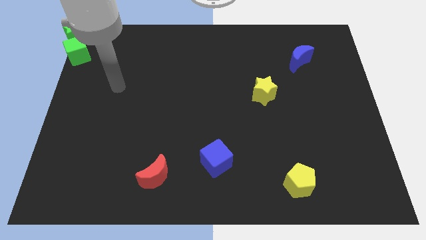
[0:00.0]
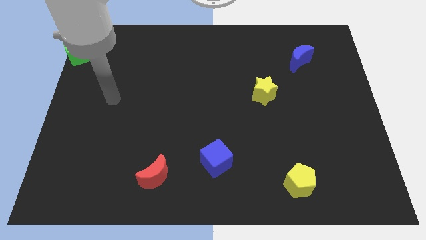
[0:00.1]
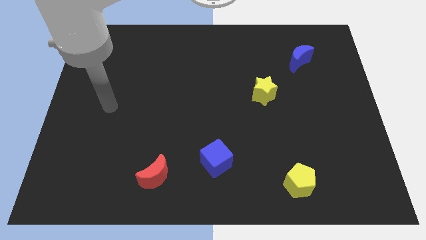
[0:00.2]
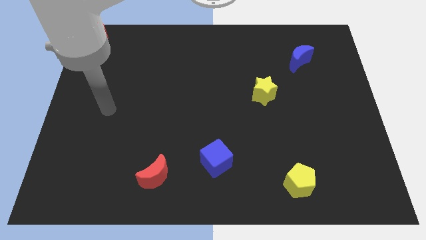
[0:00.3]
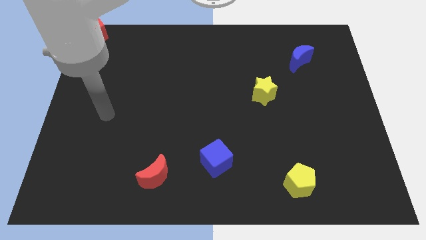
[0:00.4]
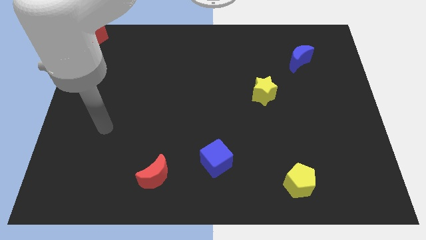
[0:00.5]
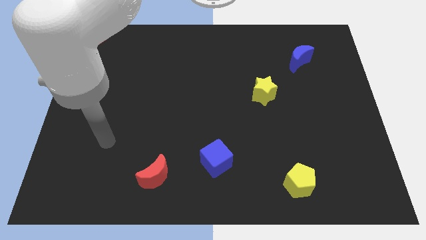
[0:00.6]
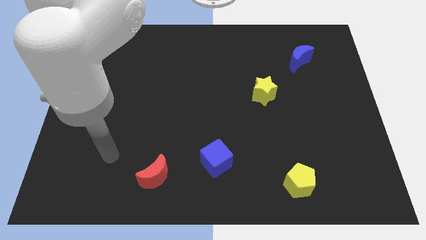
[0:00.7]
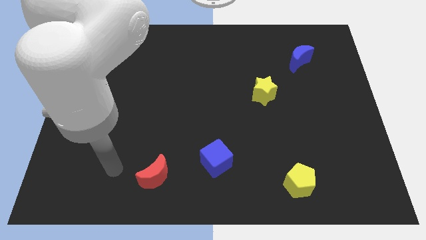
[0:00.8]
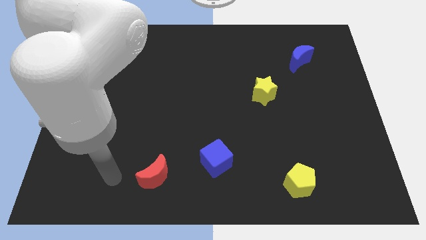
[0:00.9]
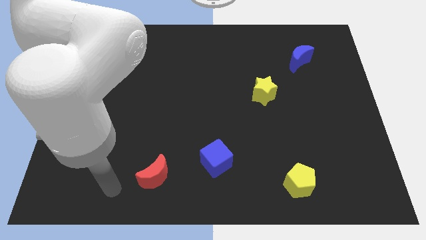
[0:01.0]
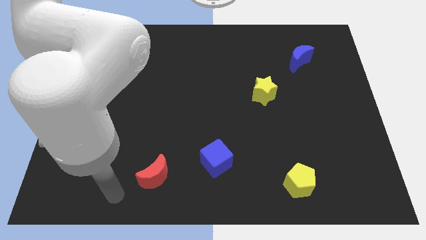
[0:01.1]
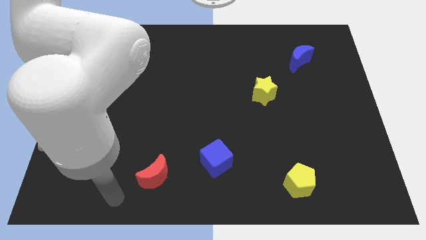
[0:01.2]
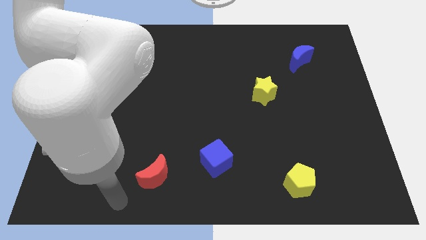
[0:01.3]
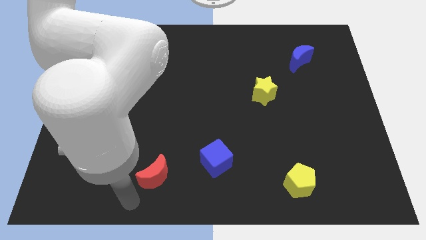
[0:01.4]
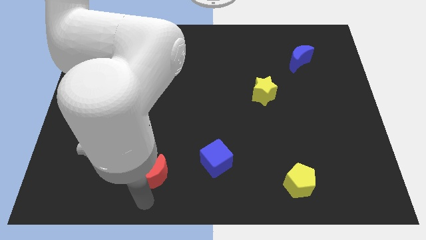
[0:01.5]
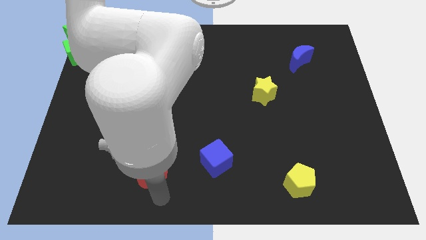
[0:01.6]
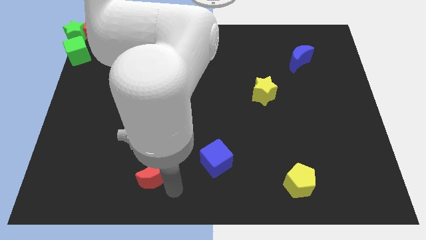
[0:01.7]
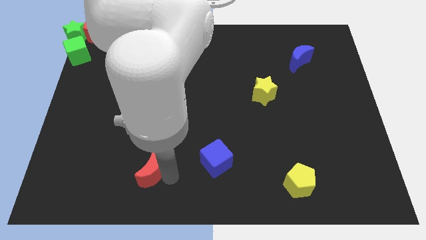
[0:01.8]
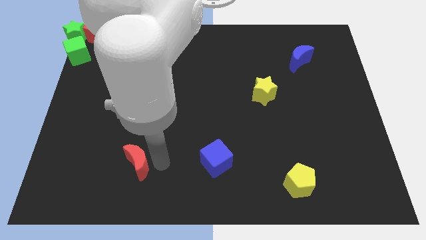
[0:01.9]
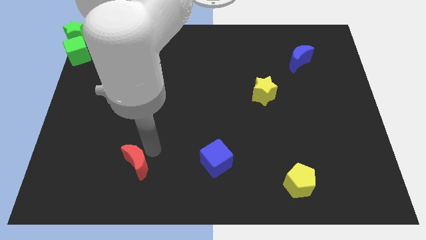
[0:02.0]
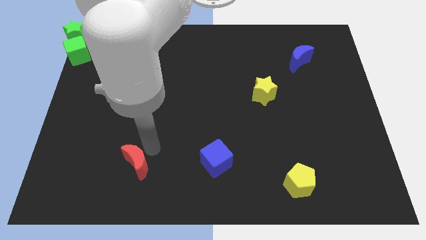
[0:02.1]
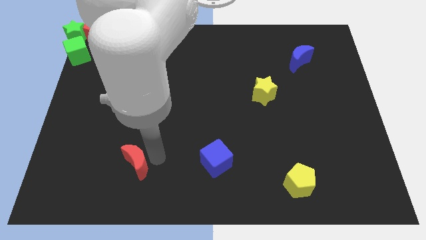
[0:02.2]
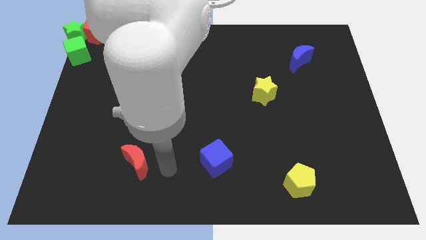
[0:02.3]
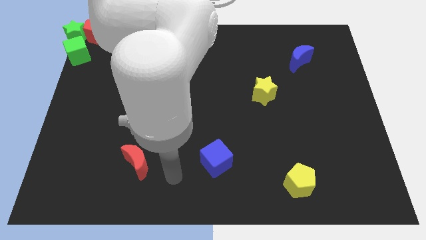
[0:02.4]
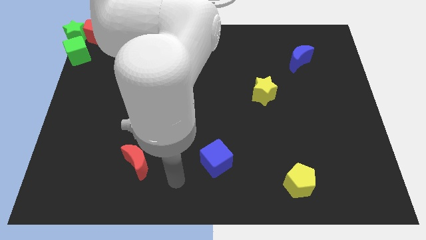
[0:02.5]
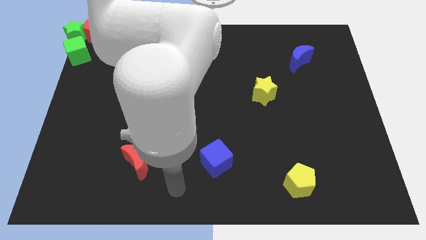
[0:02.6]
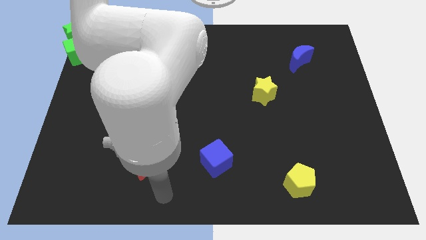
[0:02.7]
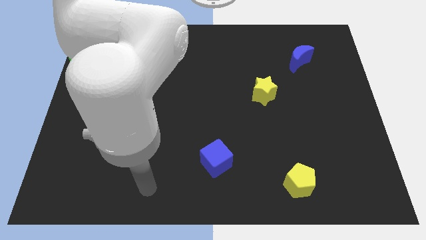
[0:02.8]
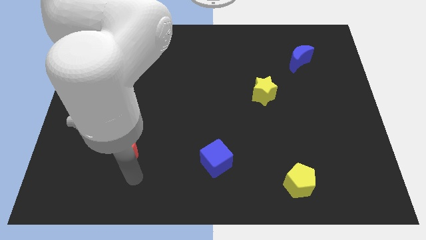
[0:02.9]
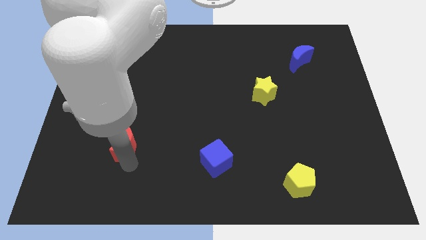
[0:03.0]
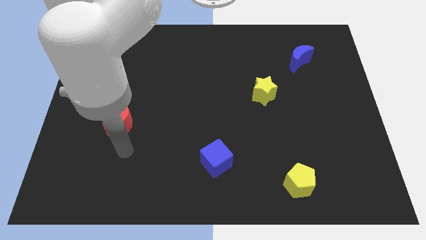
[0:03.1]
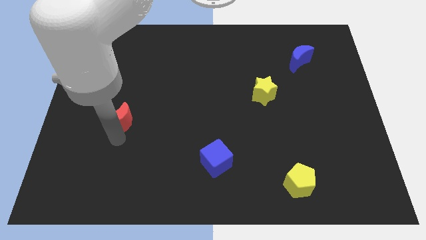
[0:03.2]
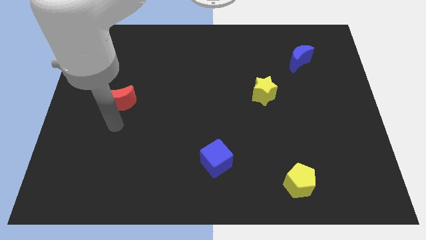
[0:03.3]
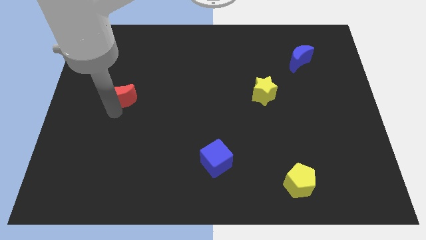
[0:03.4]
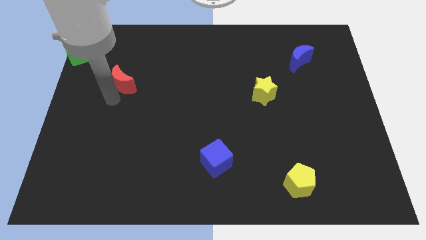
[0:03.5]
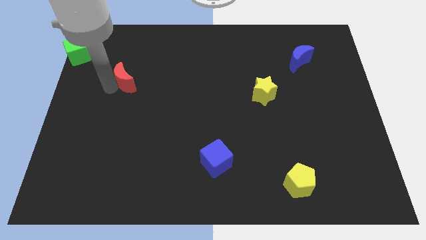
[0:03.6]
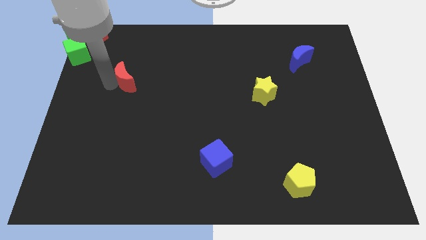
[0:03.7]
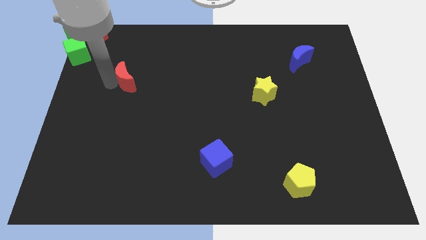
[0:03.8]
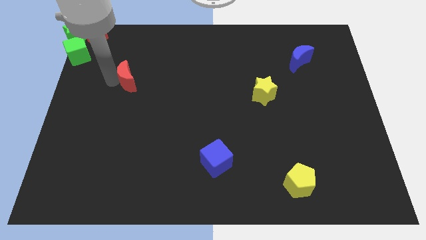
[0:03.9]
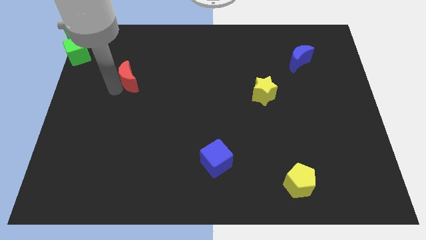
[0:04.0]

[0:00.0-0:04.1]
push the red moon upward

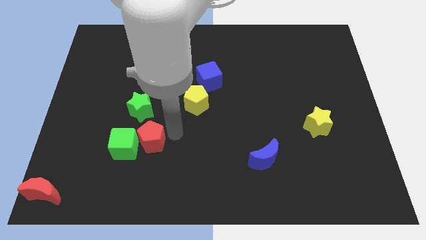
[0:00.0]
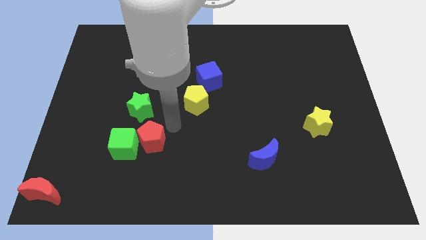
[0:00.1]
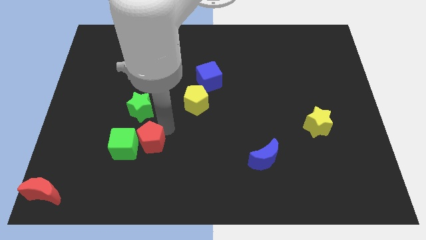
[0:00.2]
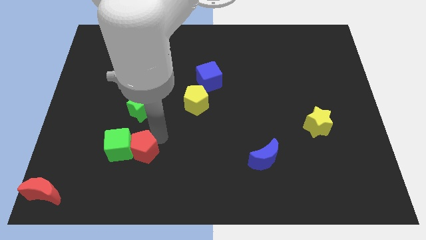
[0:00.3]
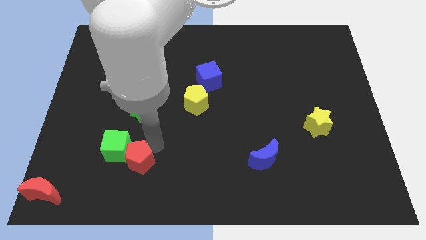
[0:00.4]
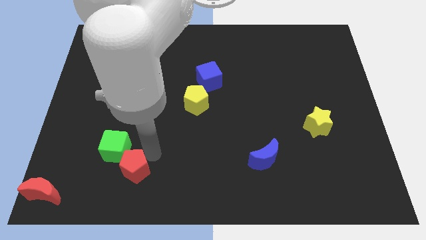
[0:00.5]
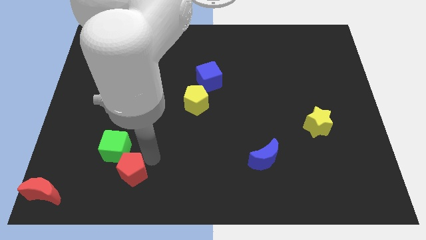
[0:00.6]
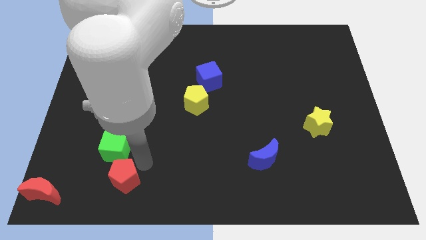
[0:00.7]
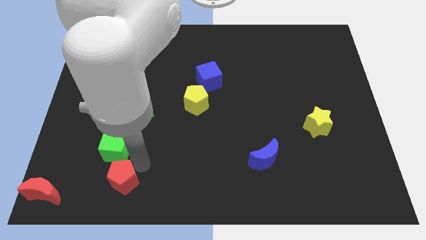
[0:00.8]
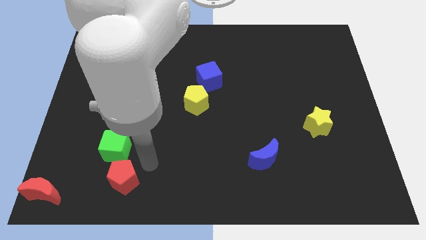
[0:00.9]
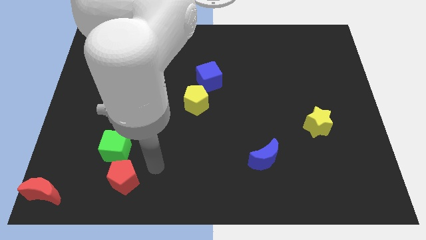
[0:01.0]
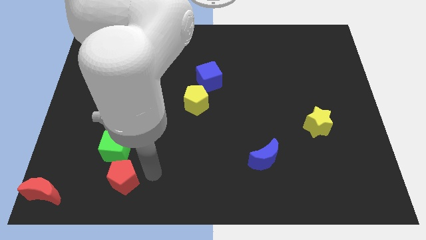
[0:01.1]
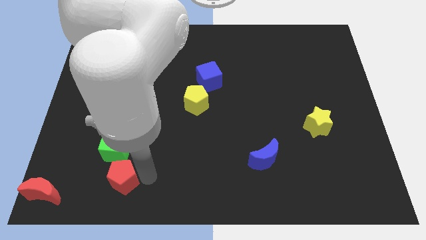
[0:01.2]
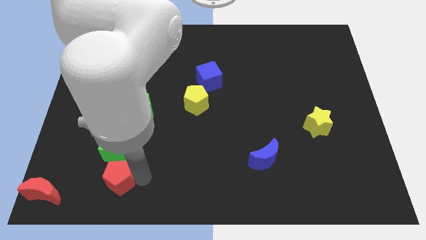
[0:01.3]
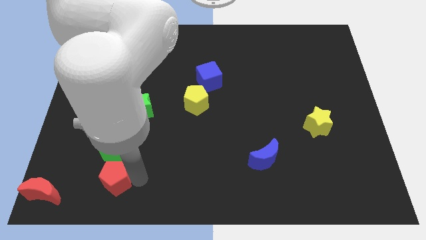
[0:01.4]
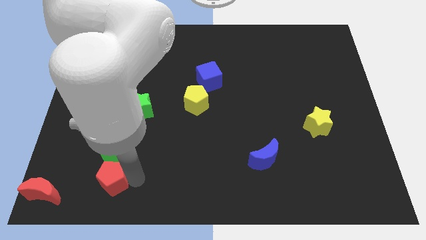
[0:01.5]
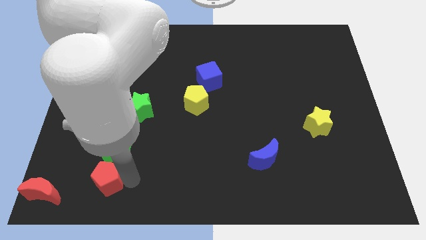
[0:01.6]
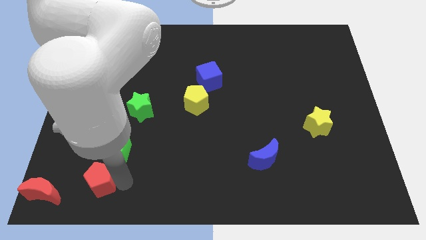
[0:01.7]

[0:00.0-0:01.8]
place the red pentagon below green cube

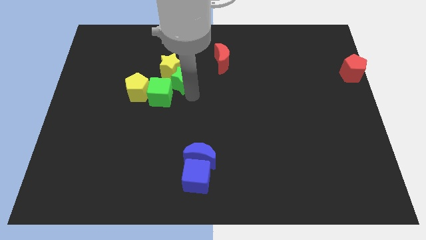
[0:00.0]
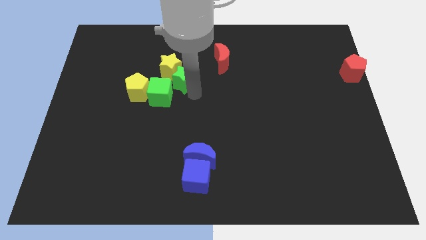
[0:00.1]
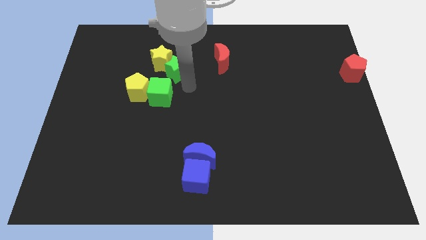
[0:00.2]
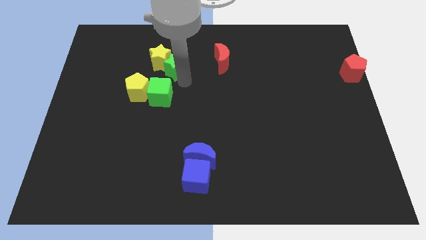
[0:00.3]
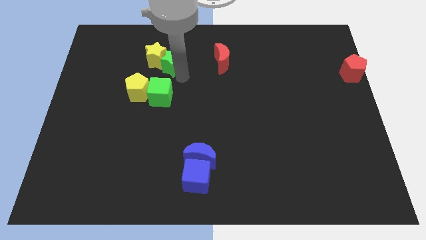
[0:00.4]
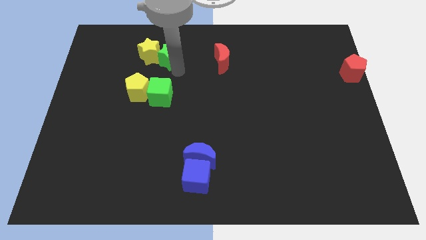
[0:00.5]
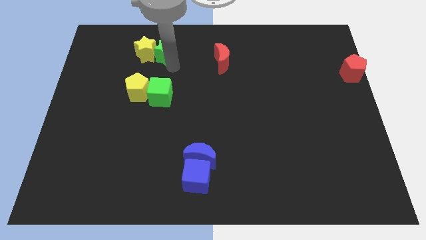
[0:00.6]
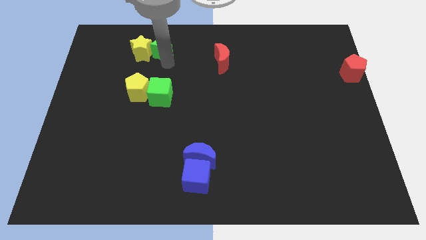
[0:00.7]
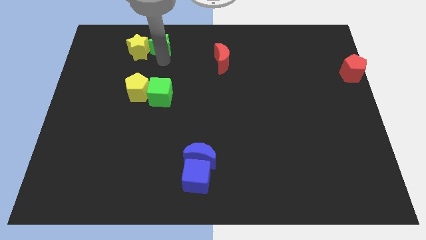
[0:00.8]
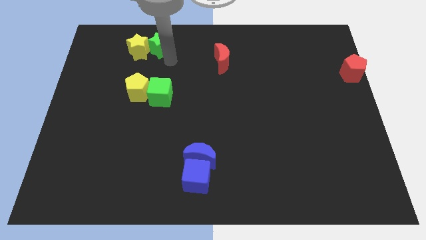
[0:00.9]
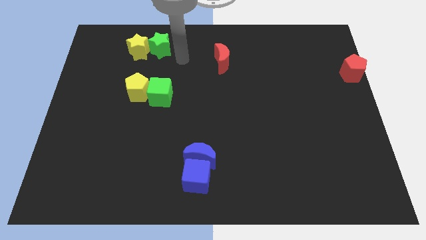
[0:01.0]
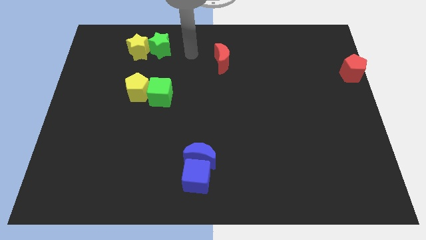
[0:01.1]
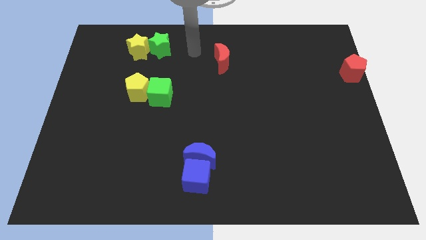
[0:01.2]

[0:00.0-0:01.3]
push the yellow star with green star

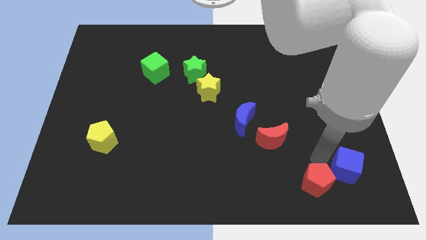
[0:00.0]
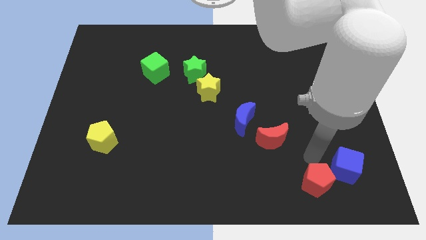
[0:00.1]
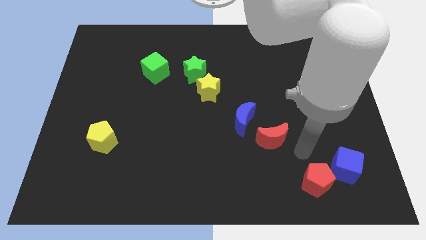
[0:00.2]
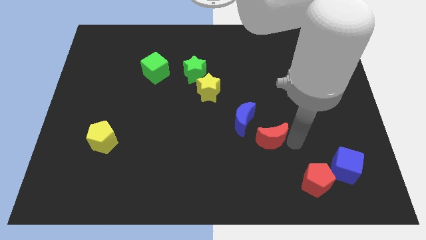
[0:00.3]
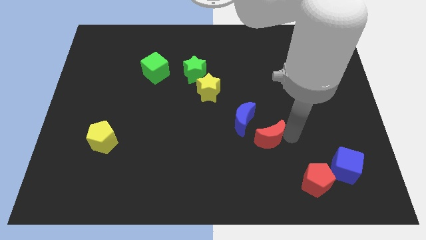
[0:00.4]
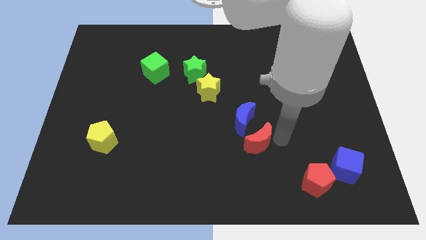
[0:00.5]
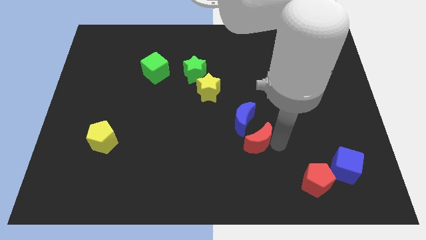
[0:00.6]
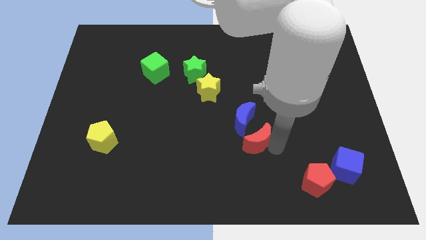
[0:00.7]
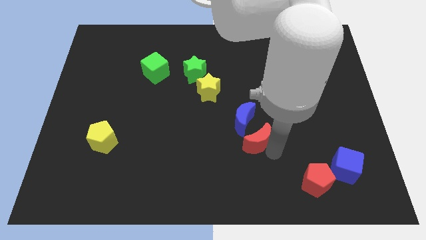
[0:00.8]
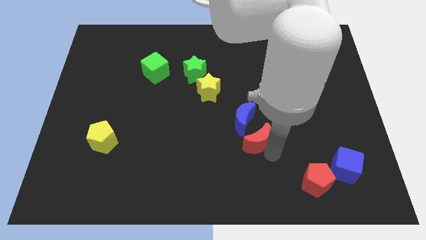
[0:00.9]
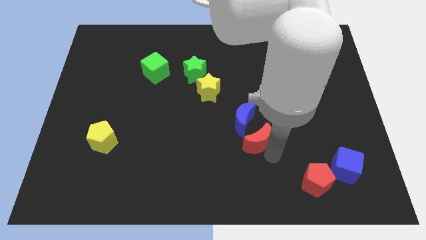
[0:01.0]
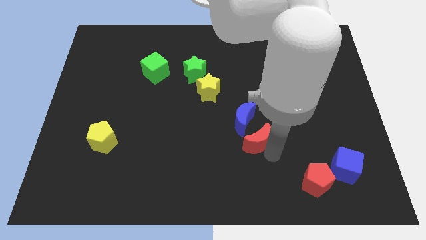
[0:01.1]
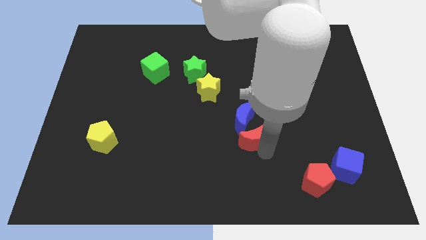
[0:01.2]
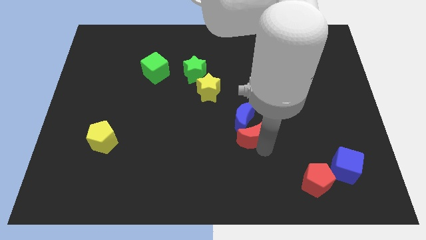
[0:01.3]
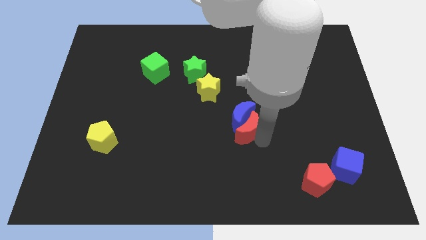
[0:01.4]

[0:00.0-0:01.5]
move the red crescent into the blue crescent

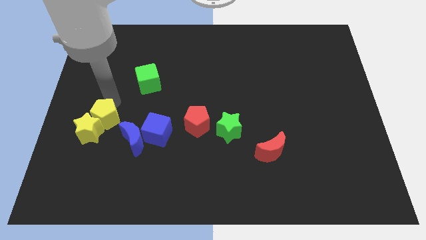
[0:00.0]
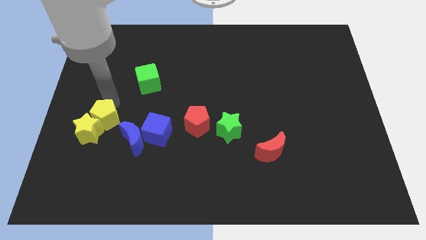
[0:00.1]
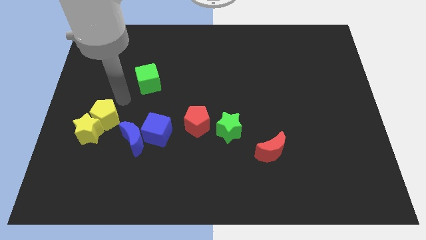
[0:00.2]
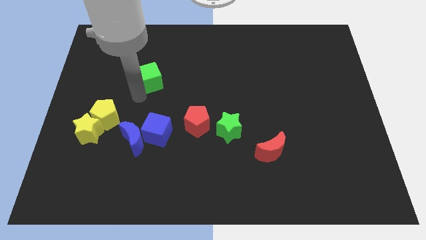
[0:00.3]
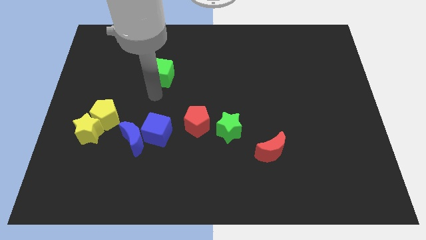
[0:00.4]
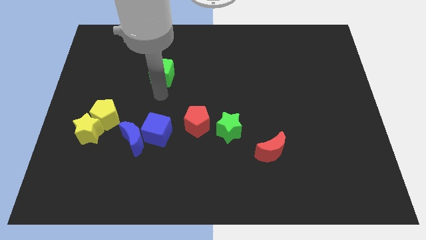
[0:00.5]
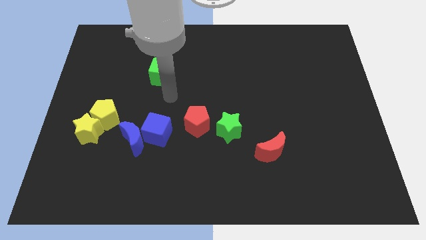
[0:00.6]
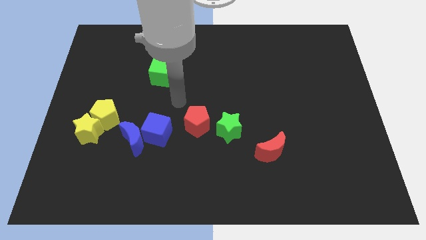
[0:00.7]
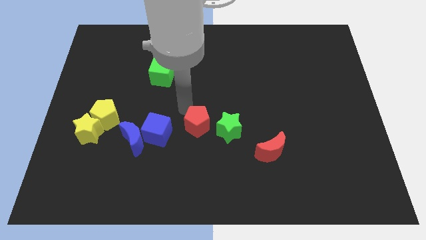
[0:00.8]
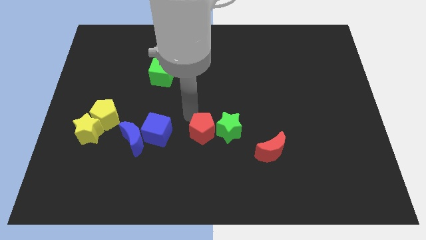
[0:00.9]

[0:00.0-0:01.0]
slightly move the green cube to the top
